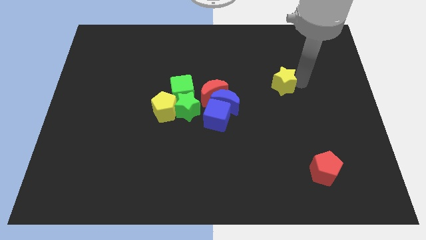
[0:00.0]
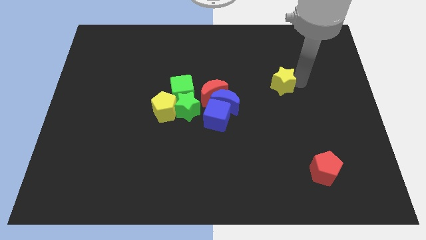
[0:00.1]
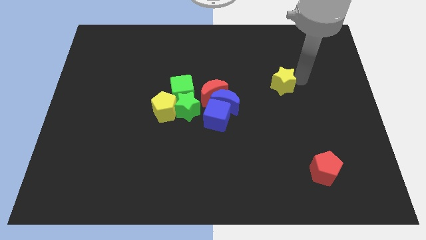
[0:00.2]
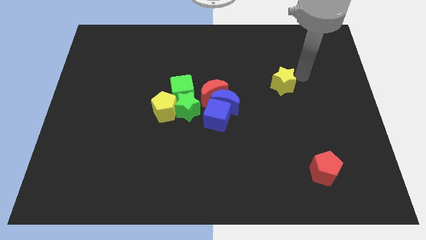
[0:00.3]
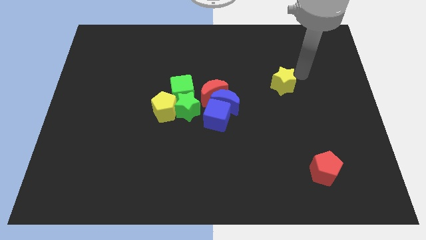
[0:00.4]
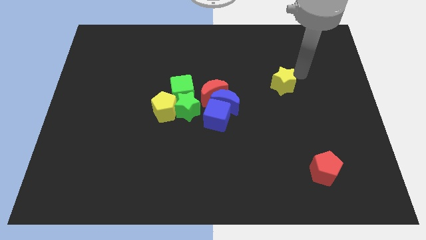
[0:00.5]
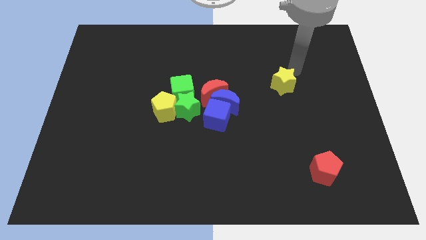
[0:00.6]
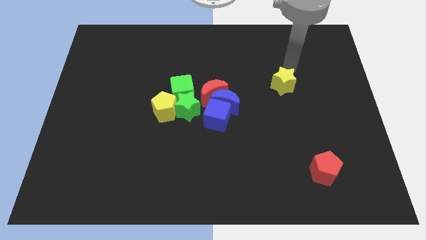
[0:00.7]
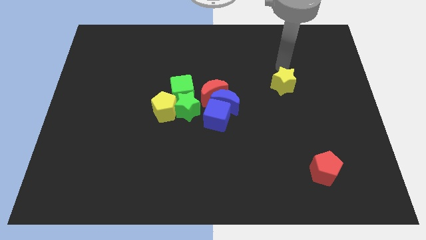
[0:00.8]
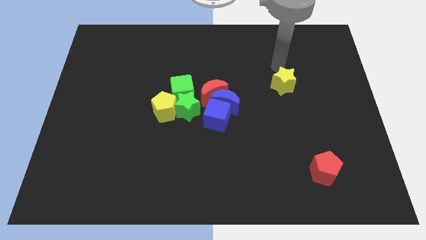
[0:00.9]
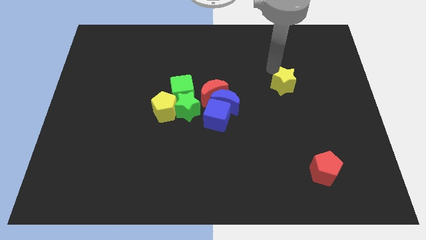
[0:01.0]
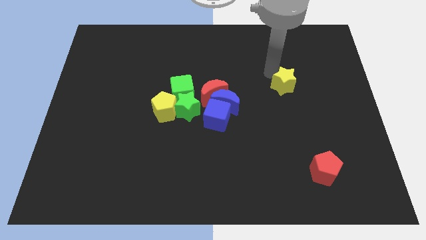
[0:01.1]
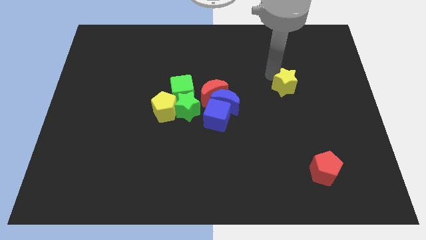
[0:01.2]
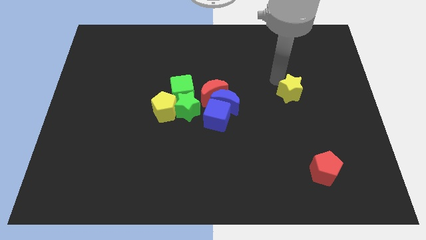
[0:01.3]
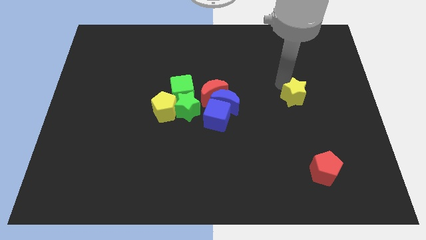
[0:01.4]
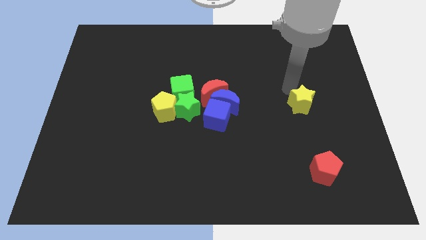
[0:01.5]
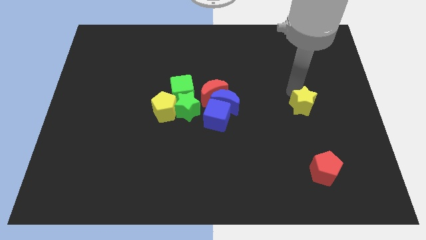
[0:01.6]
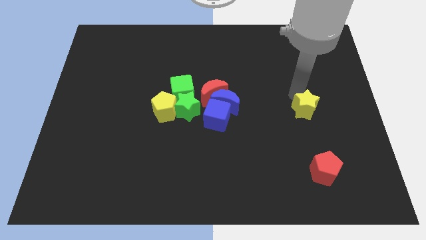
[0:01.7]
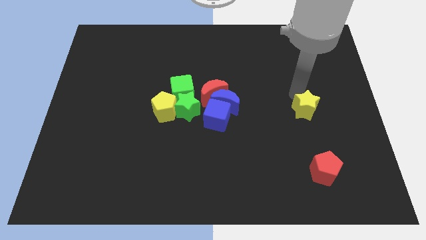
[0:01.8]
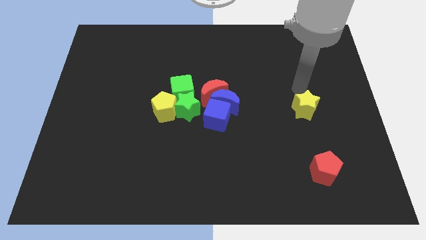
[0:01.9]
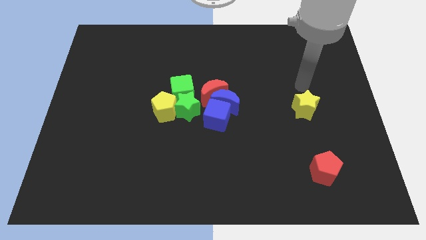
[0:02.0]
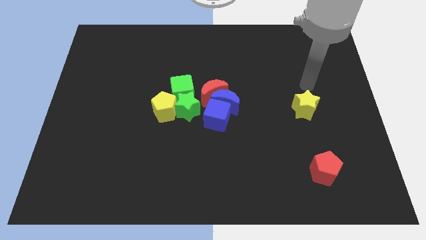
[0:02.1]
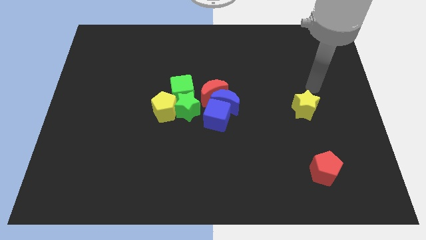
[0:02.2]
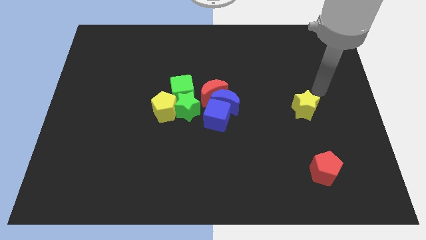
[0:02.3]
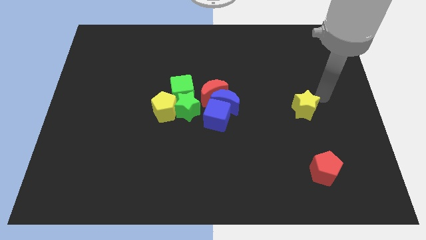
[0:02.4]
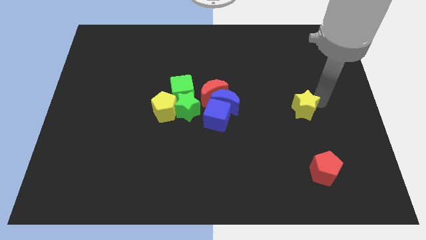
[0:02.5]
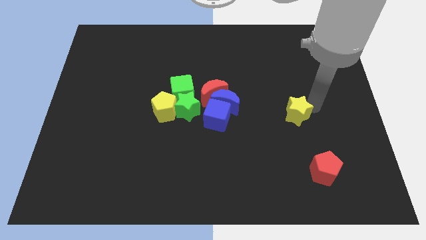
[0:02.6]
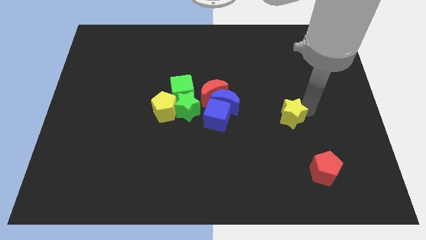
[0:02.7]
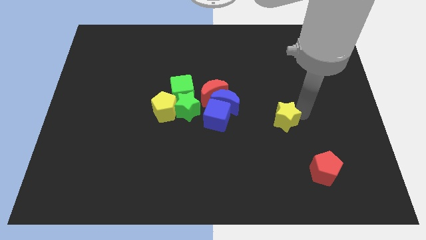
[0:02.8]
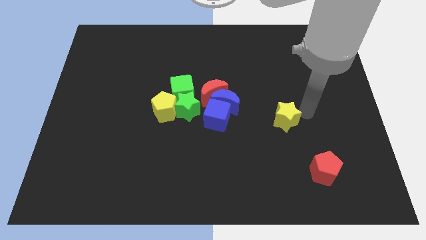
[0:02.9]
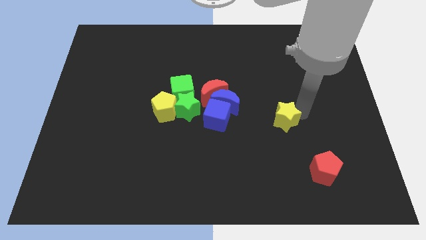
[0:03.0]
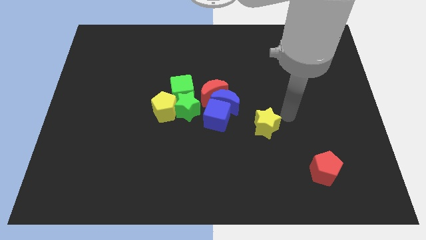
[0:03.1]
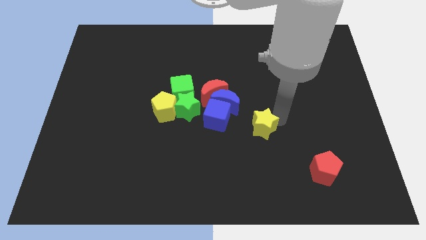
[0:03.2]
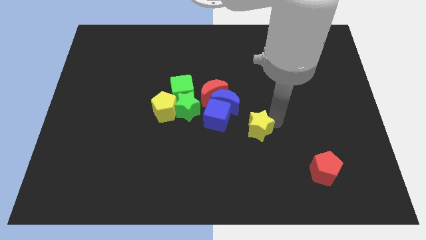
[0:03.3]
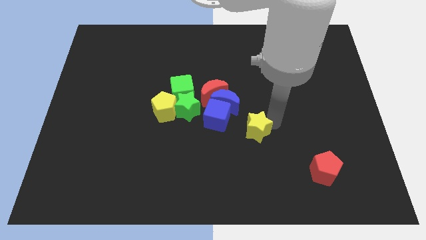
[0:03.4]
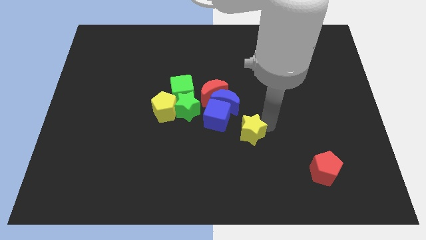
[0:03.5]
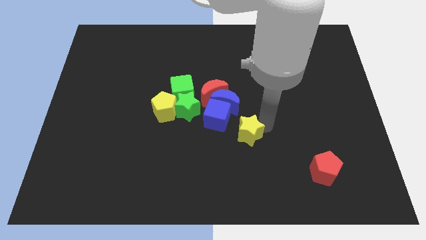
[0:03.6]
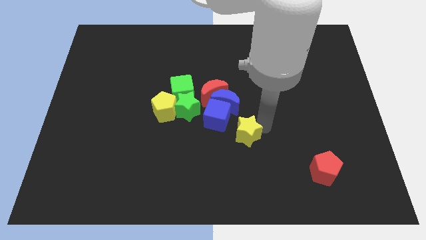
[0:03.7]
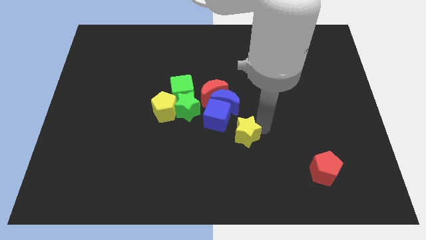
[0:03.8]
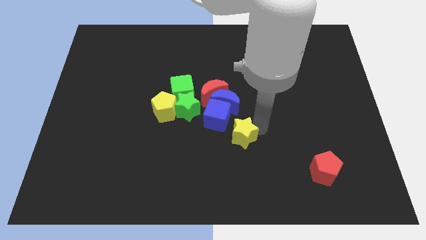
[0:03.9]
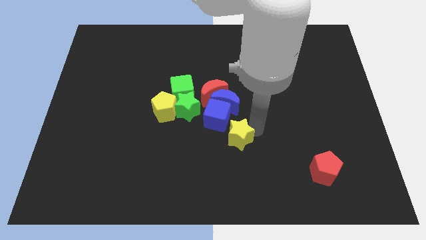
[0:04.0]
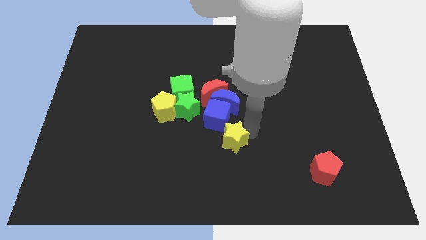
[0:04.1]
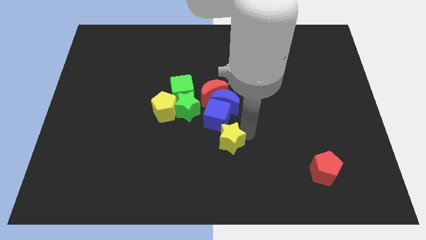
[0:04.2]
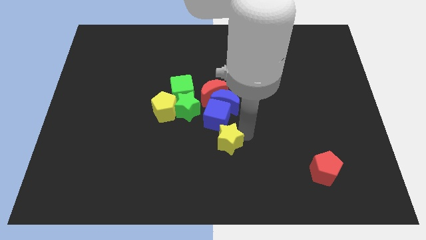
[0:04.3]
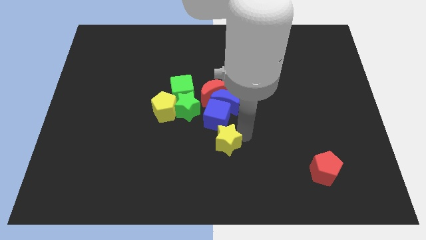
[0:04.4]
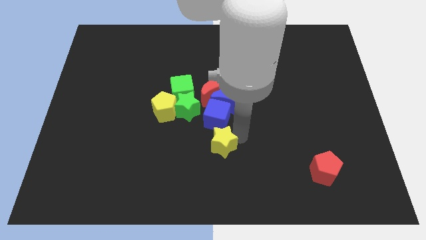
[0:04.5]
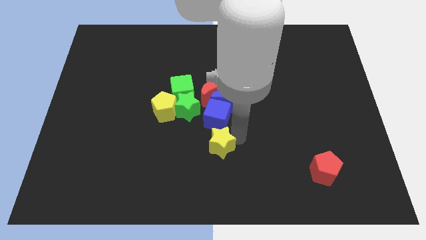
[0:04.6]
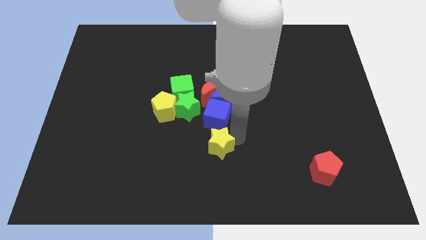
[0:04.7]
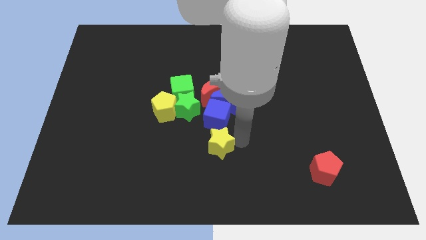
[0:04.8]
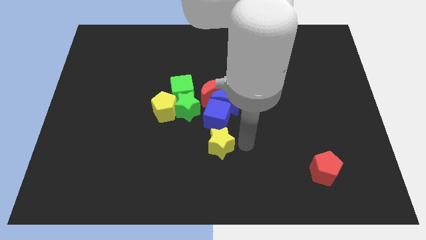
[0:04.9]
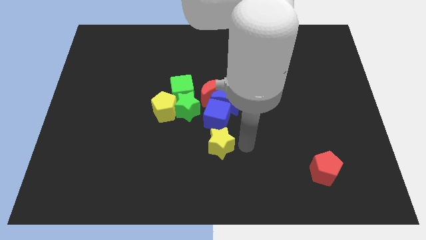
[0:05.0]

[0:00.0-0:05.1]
place the yellow star below the blue cube

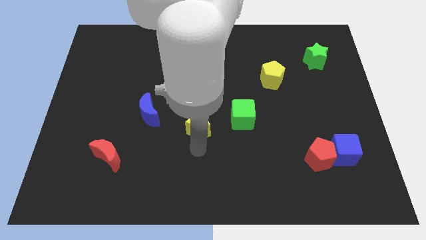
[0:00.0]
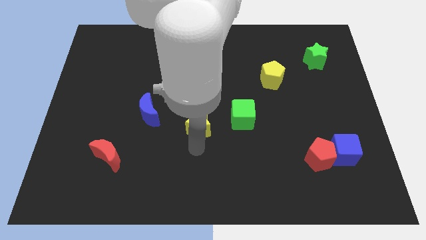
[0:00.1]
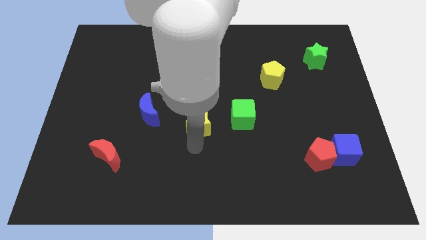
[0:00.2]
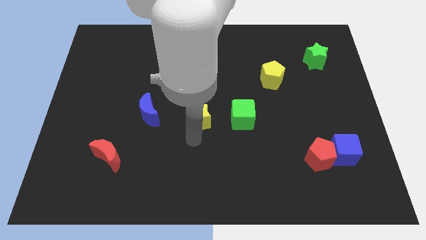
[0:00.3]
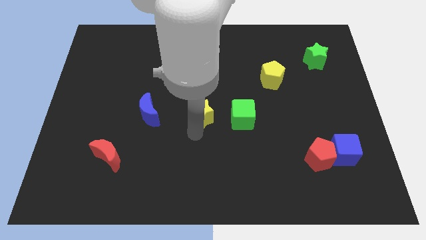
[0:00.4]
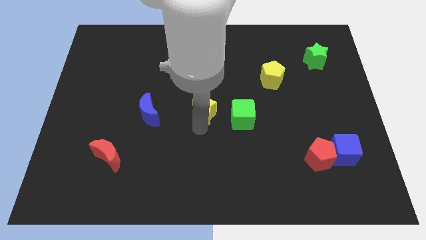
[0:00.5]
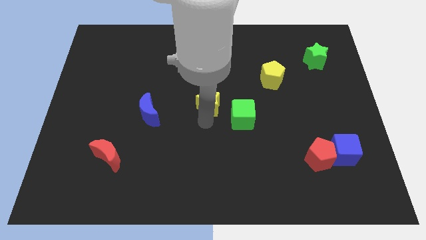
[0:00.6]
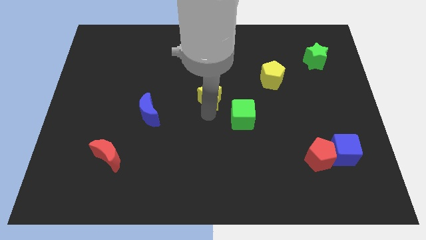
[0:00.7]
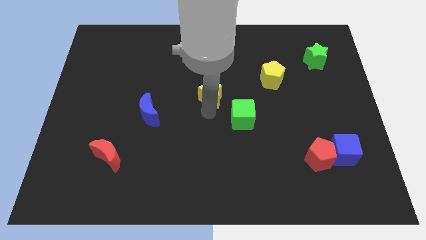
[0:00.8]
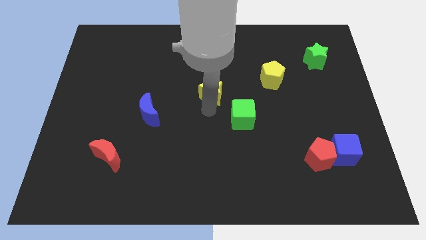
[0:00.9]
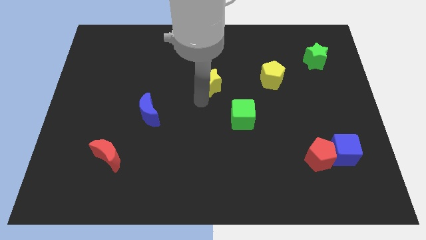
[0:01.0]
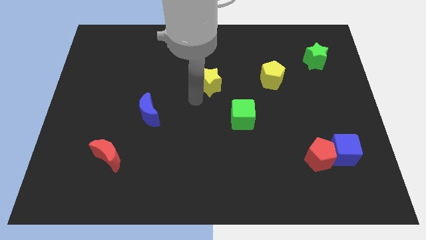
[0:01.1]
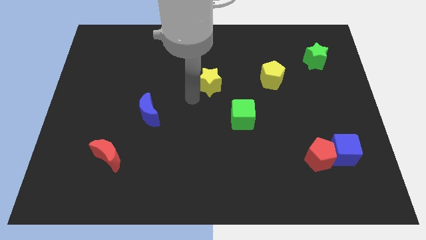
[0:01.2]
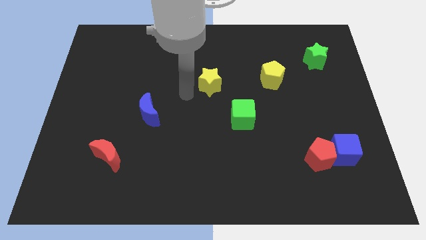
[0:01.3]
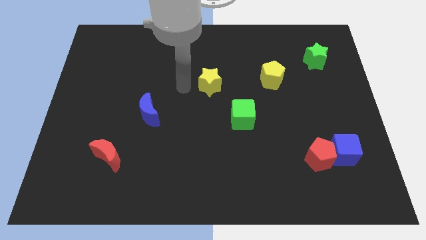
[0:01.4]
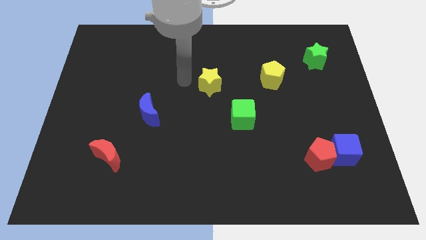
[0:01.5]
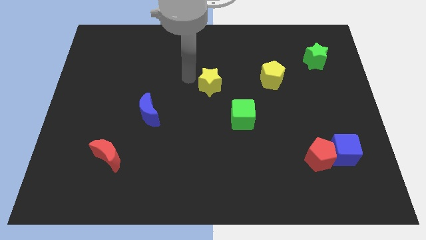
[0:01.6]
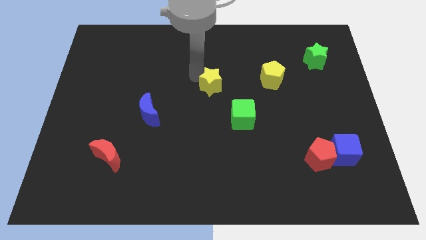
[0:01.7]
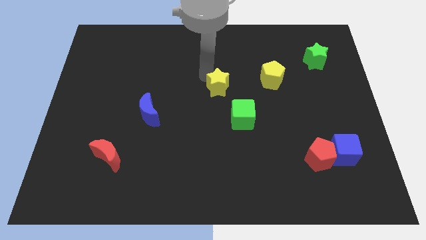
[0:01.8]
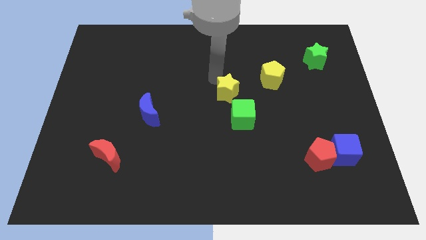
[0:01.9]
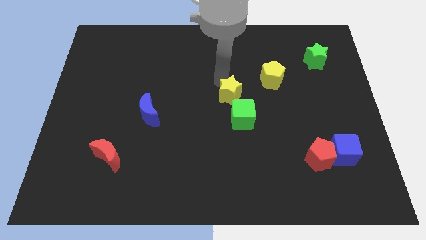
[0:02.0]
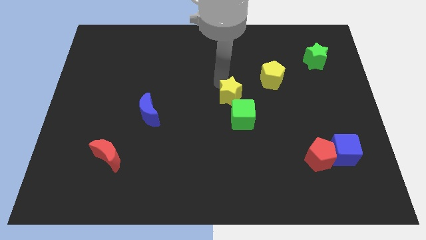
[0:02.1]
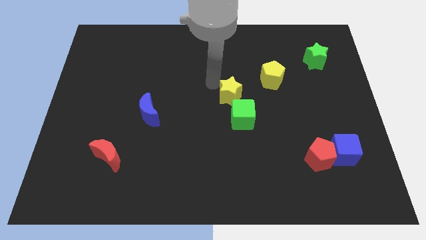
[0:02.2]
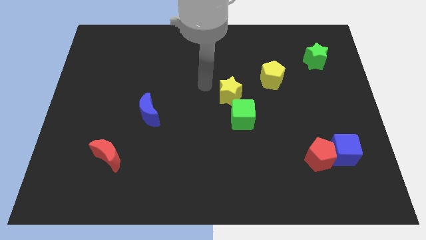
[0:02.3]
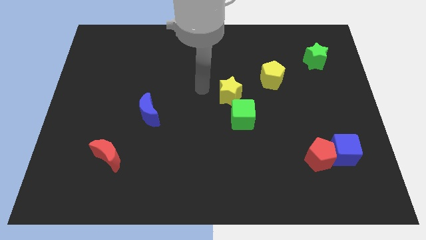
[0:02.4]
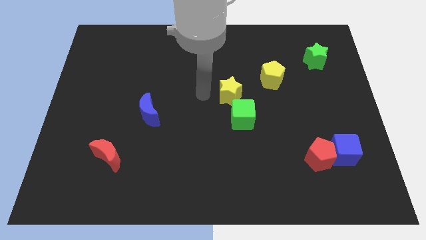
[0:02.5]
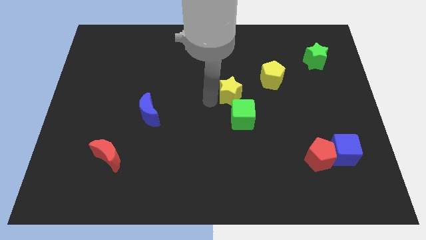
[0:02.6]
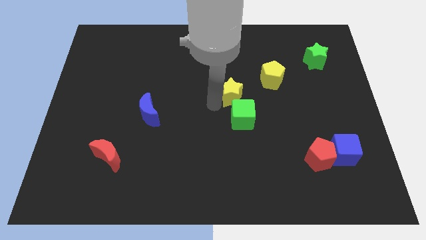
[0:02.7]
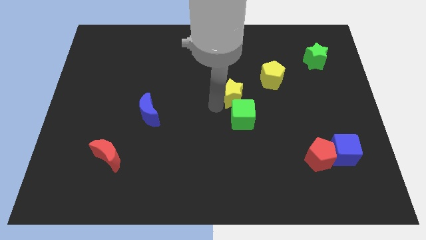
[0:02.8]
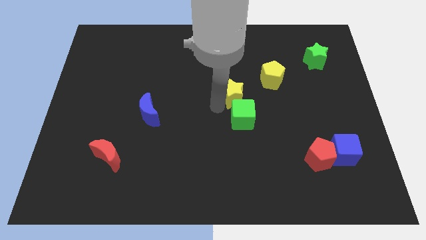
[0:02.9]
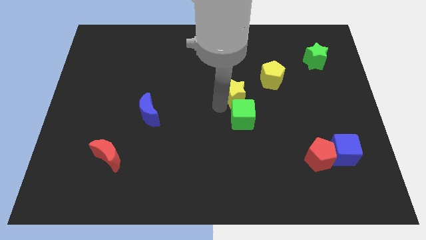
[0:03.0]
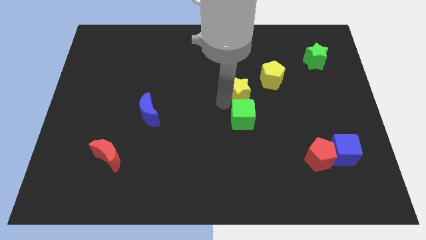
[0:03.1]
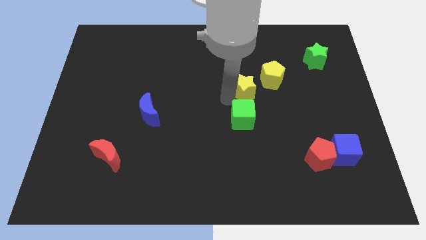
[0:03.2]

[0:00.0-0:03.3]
move the yellow star above the green cube
